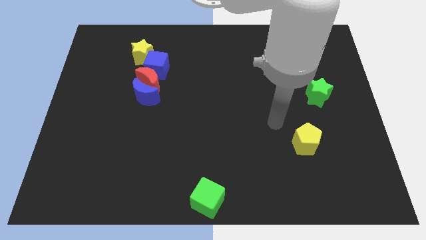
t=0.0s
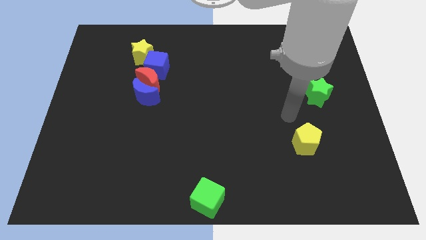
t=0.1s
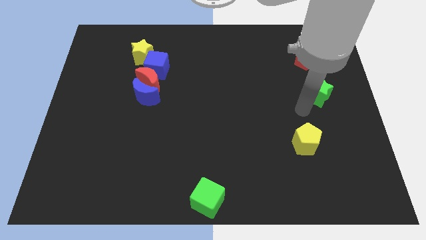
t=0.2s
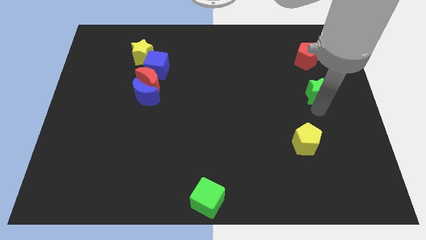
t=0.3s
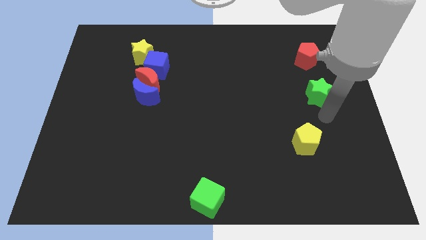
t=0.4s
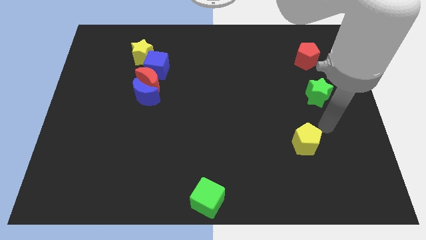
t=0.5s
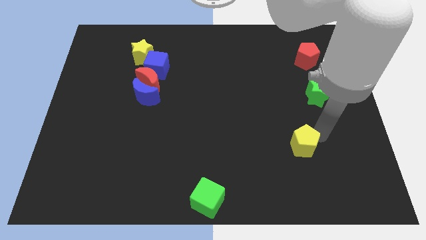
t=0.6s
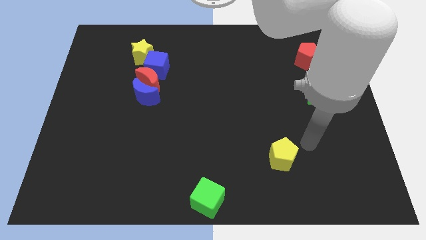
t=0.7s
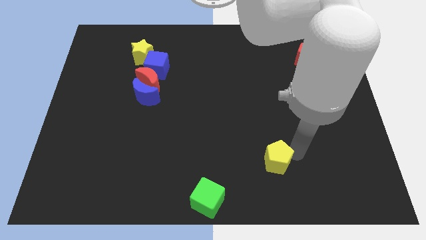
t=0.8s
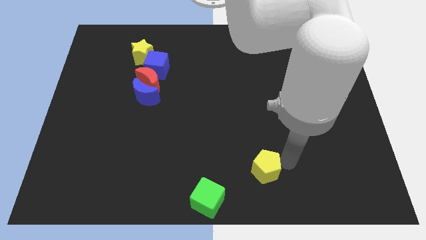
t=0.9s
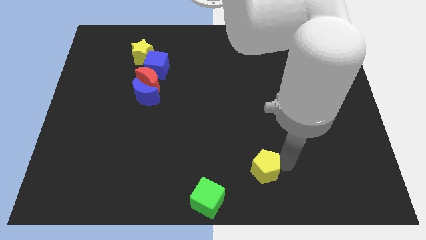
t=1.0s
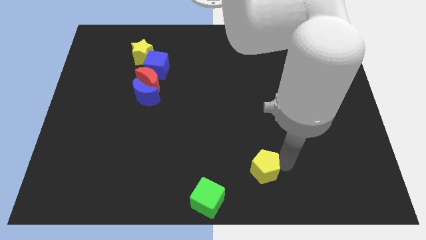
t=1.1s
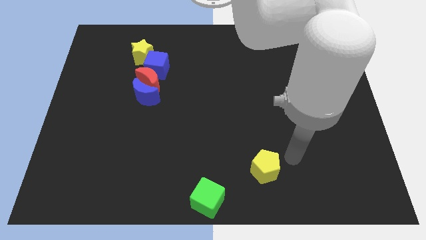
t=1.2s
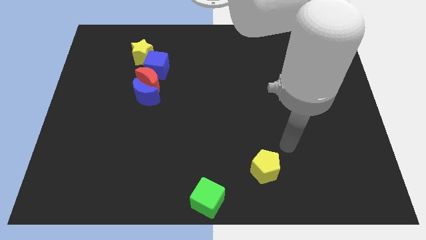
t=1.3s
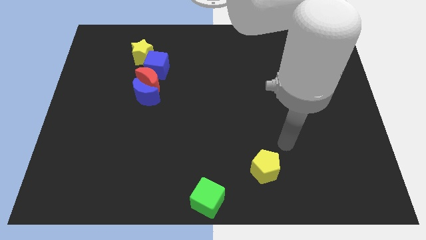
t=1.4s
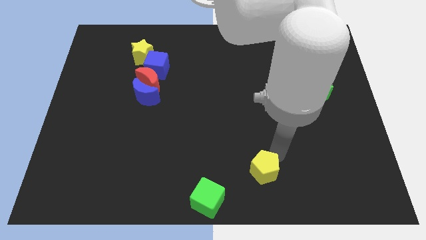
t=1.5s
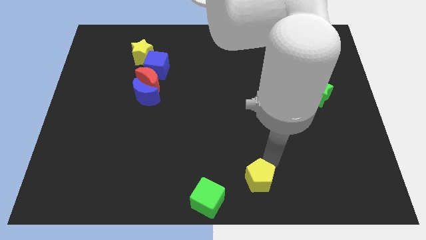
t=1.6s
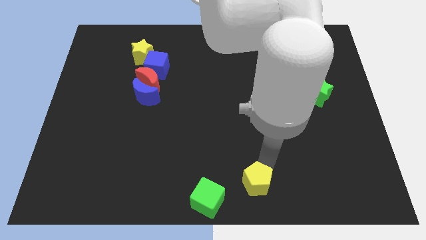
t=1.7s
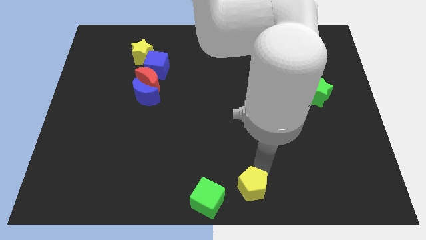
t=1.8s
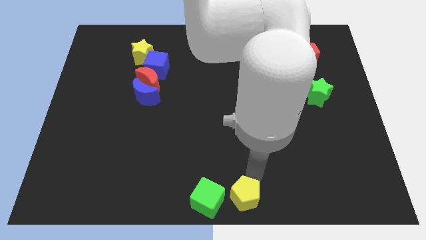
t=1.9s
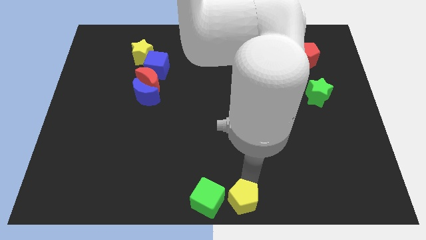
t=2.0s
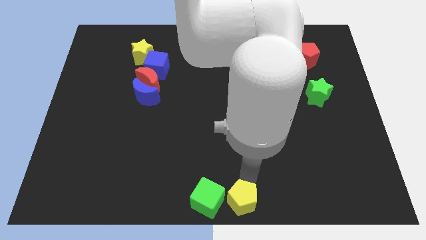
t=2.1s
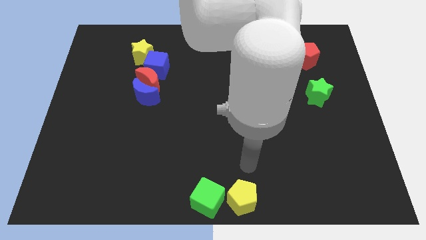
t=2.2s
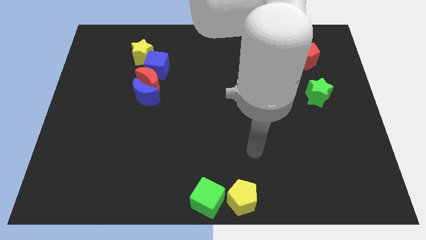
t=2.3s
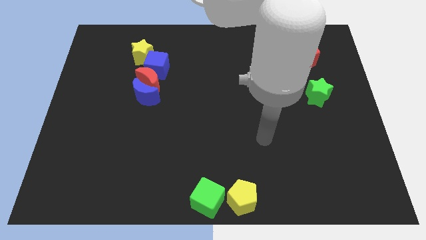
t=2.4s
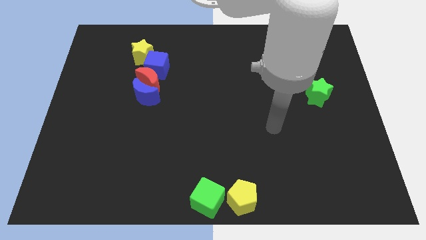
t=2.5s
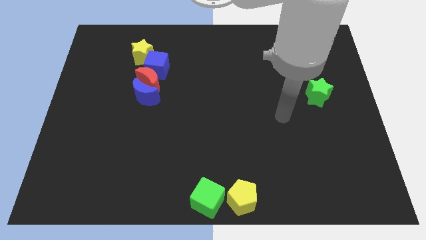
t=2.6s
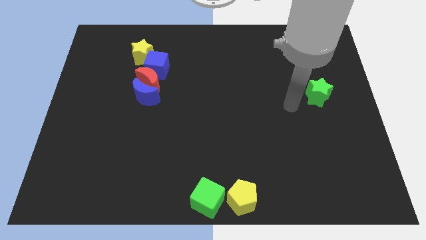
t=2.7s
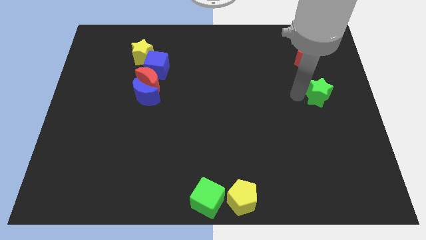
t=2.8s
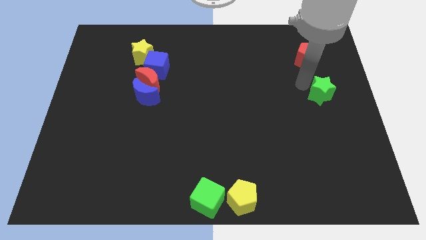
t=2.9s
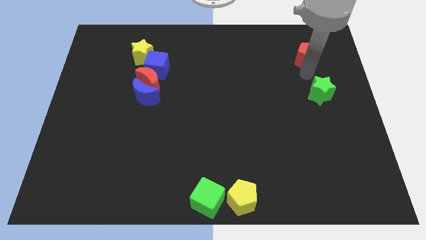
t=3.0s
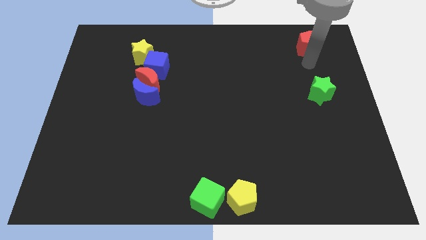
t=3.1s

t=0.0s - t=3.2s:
move the yellow pentagon right to the green cube

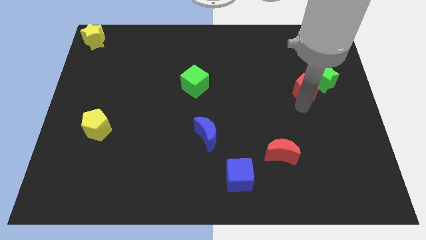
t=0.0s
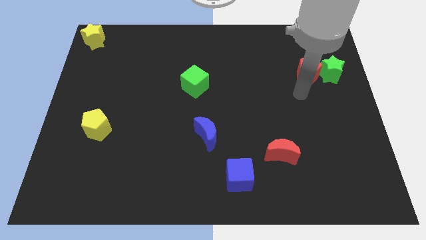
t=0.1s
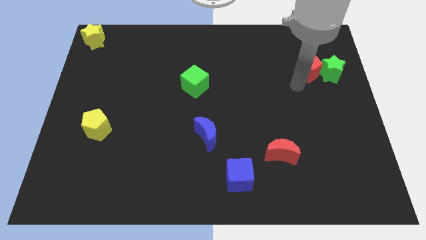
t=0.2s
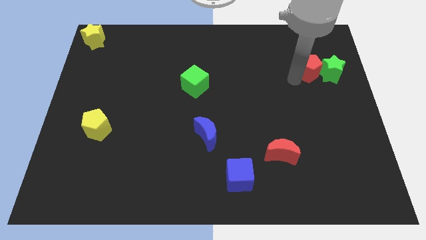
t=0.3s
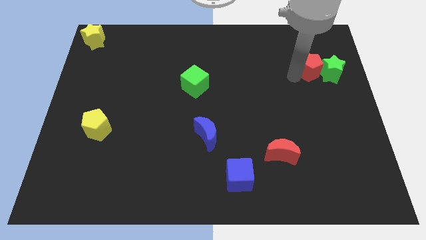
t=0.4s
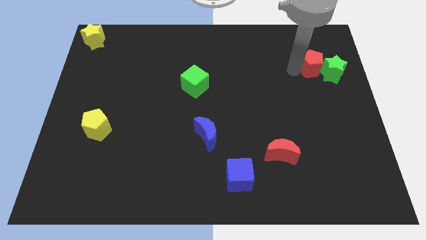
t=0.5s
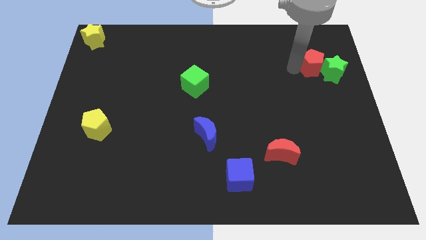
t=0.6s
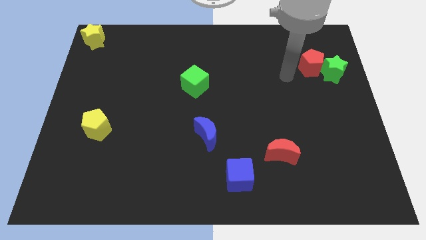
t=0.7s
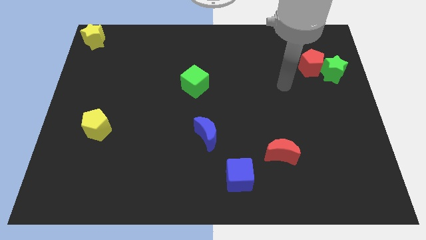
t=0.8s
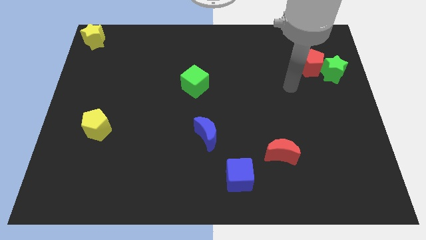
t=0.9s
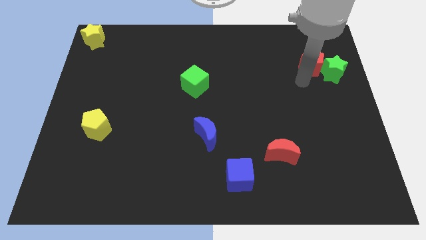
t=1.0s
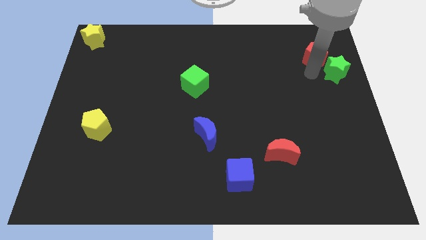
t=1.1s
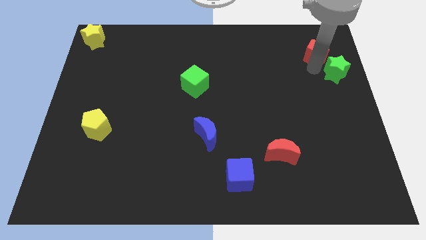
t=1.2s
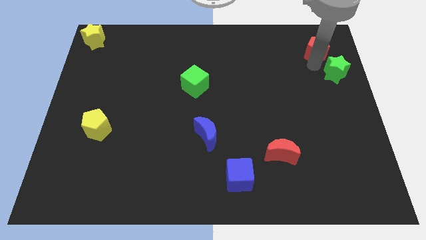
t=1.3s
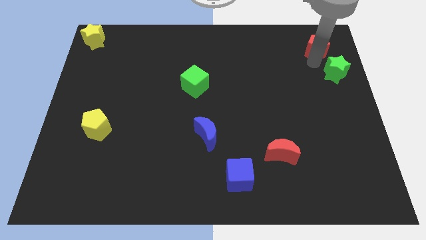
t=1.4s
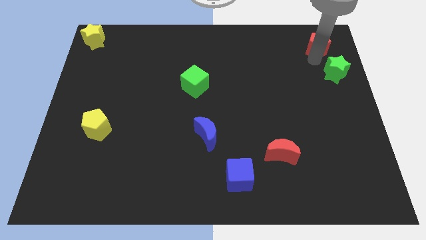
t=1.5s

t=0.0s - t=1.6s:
separate the red pentagon away from the green star

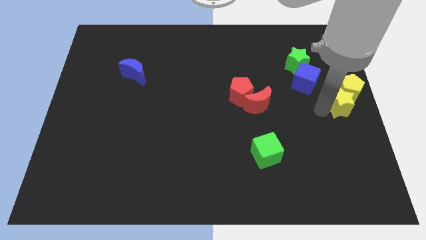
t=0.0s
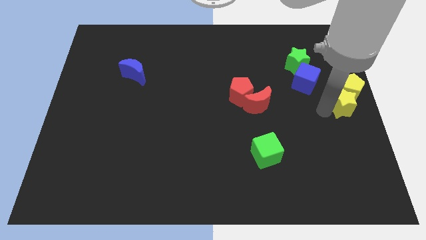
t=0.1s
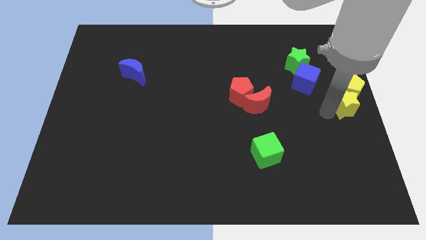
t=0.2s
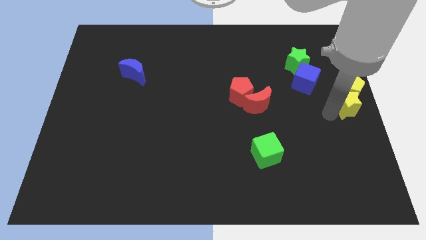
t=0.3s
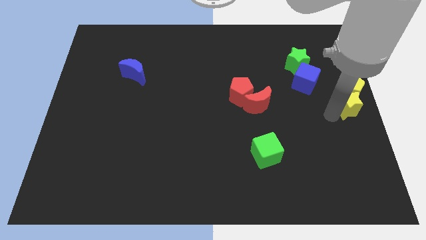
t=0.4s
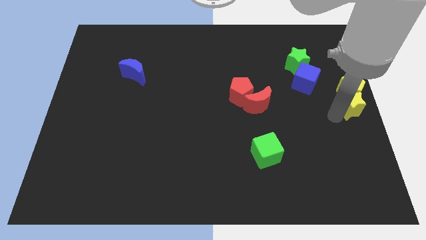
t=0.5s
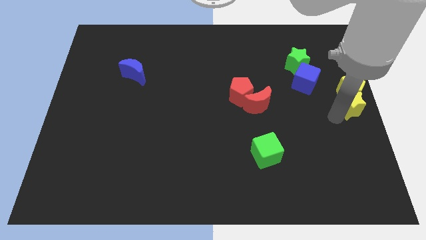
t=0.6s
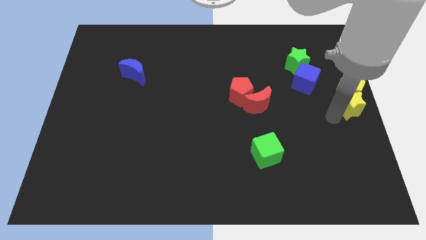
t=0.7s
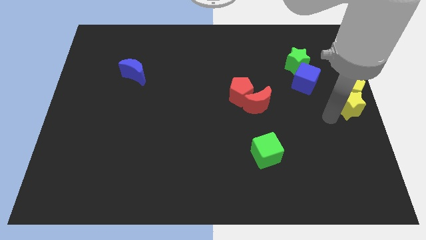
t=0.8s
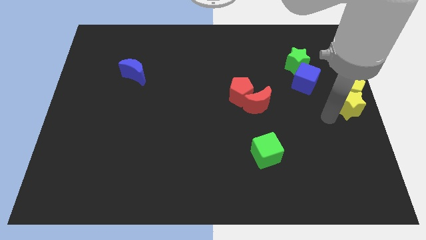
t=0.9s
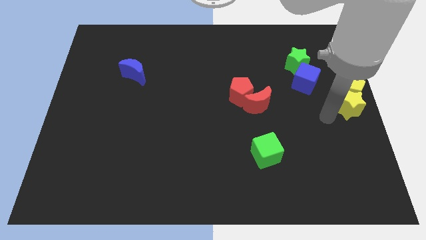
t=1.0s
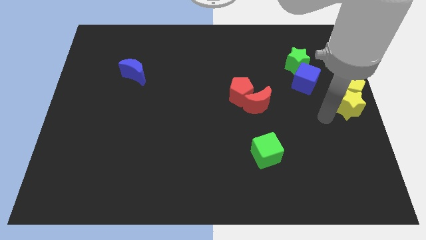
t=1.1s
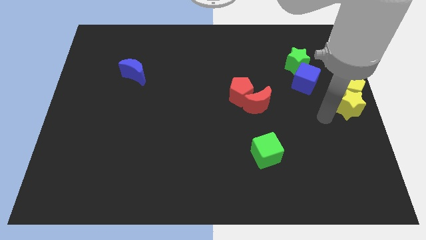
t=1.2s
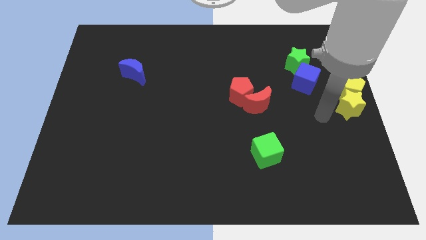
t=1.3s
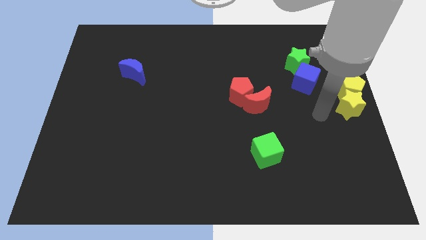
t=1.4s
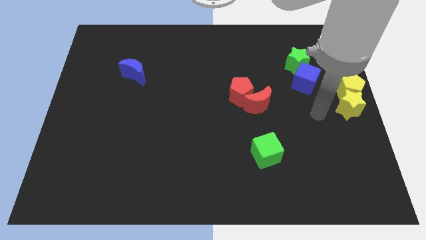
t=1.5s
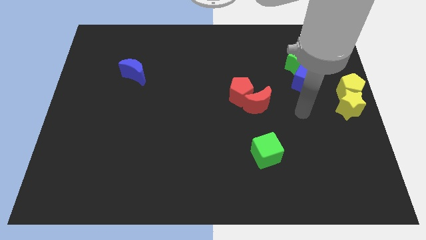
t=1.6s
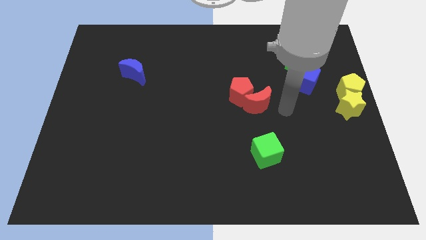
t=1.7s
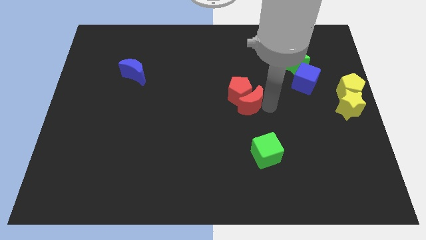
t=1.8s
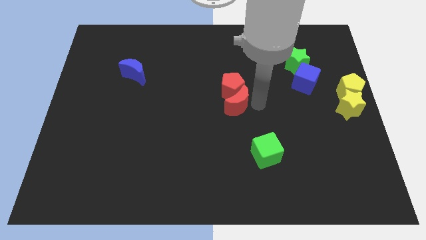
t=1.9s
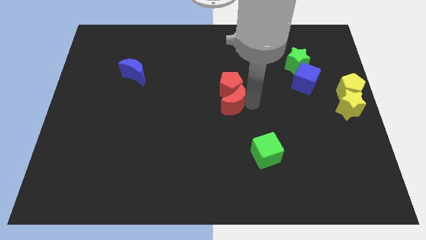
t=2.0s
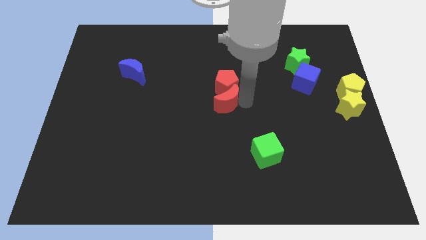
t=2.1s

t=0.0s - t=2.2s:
push the red pentagon with red crescent slightly towards the center

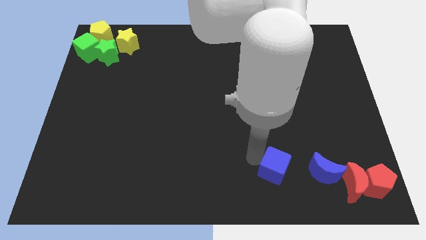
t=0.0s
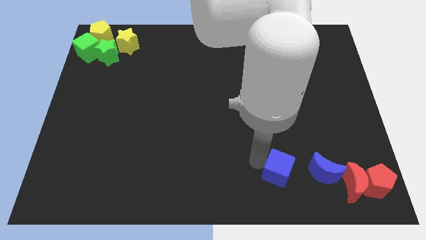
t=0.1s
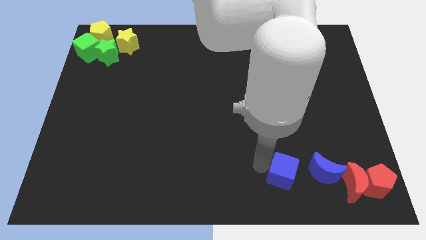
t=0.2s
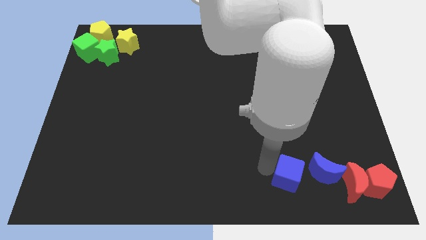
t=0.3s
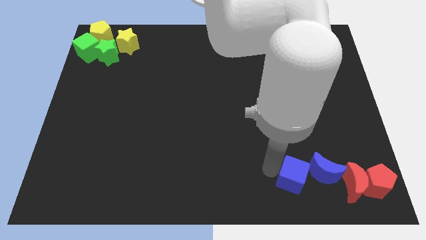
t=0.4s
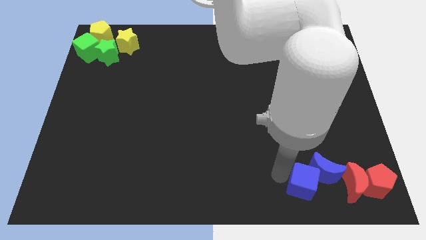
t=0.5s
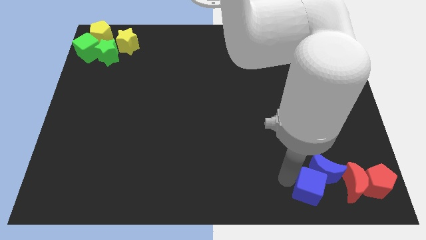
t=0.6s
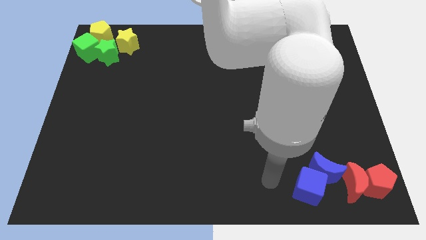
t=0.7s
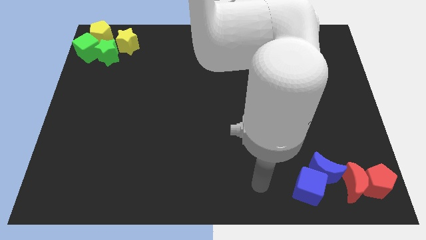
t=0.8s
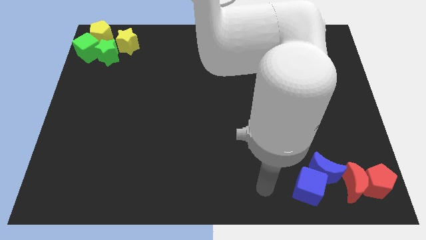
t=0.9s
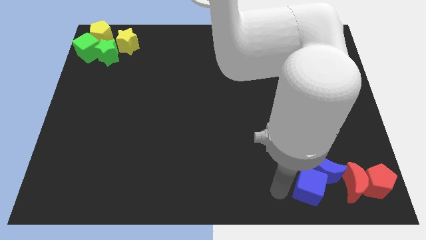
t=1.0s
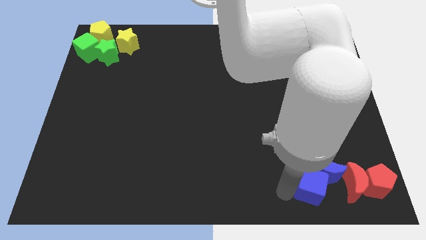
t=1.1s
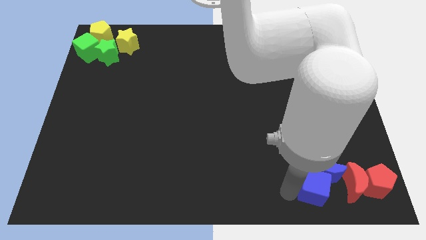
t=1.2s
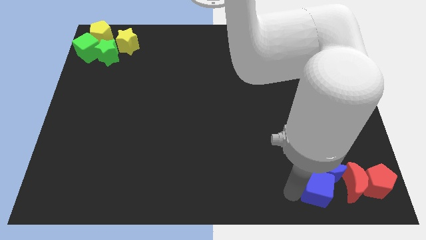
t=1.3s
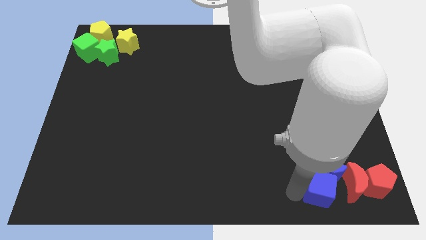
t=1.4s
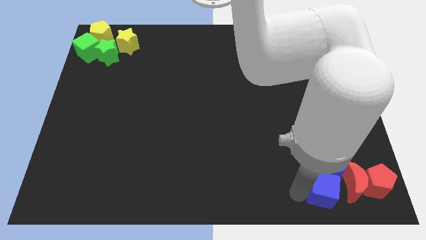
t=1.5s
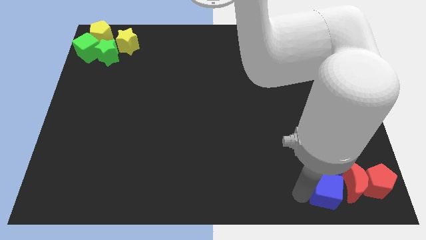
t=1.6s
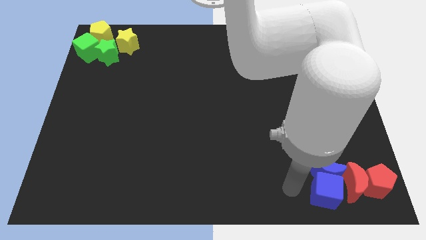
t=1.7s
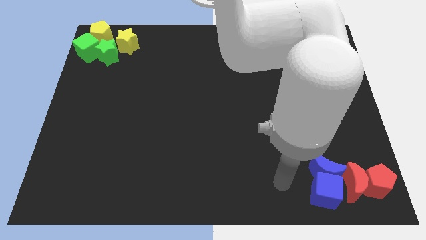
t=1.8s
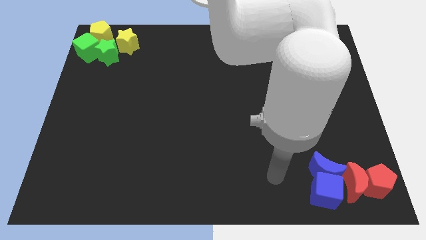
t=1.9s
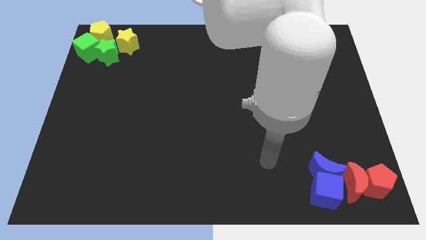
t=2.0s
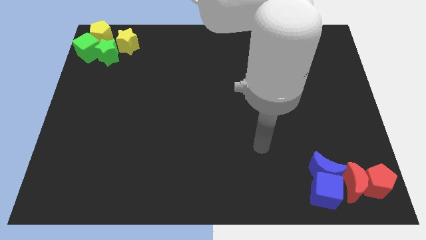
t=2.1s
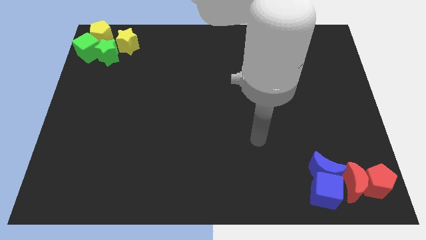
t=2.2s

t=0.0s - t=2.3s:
place the blue cube below the blue moon
